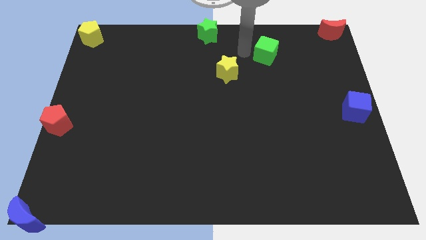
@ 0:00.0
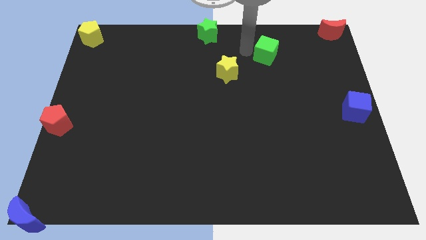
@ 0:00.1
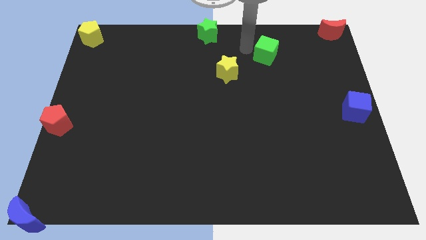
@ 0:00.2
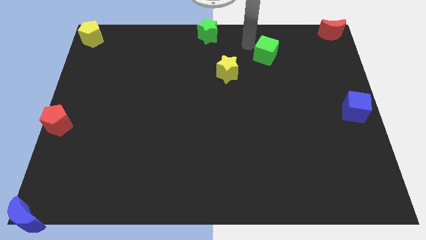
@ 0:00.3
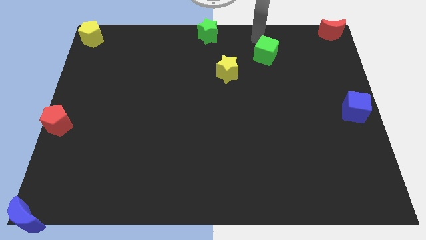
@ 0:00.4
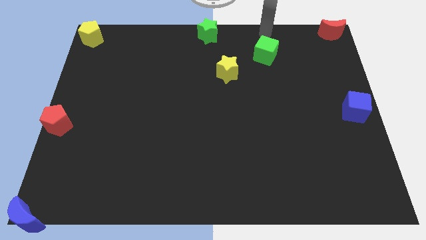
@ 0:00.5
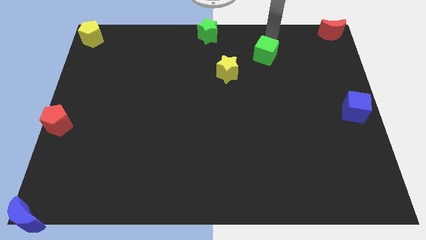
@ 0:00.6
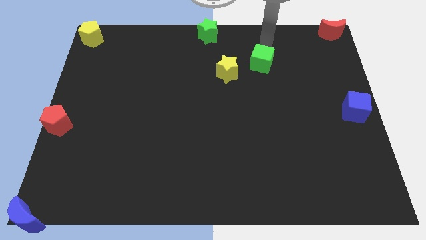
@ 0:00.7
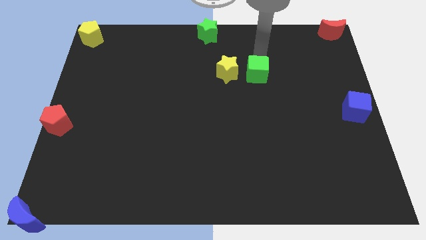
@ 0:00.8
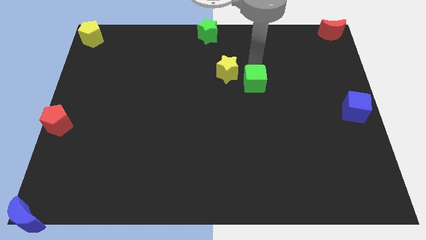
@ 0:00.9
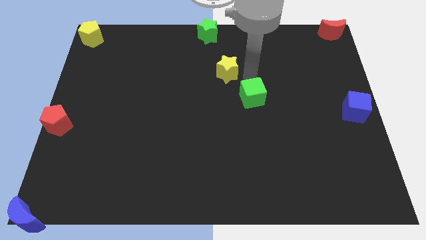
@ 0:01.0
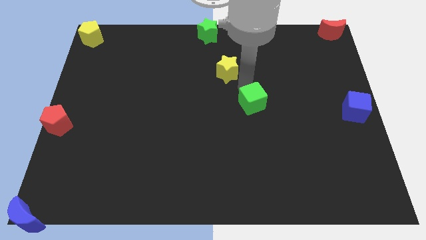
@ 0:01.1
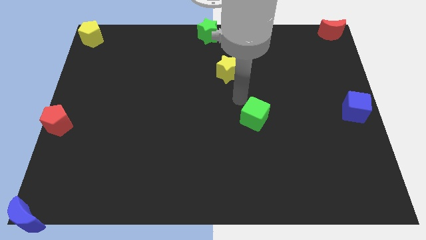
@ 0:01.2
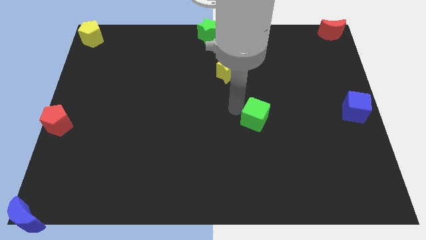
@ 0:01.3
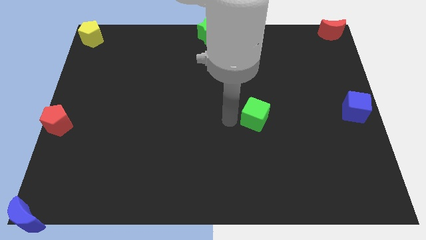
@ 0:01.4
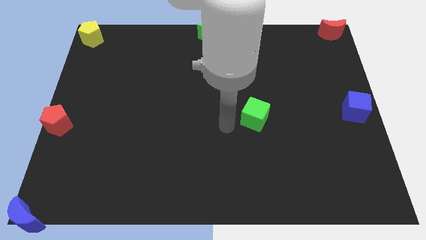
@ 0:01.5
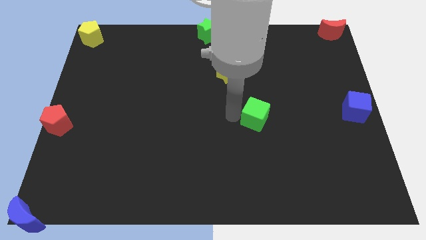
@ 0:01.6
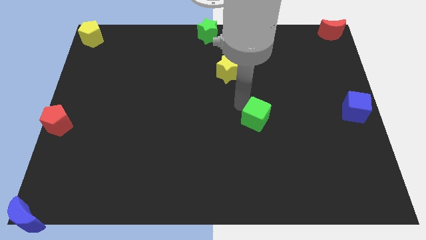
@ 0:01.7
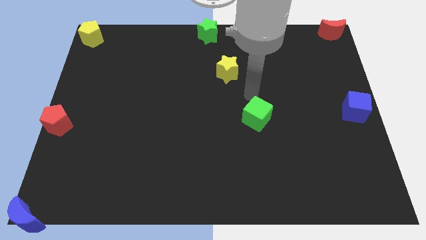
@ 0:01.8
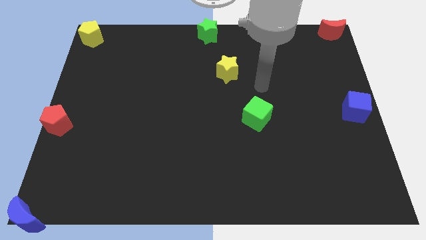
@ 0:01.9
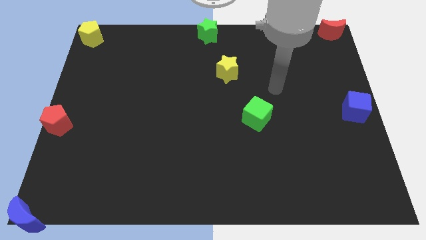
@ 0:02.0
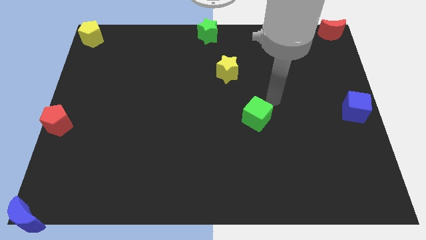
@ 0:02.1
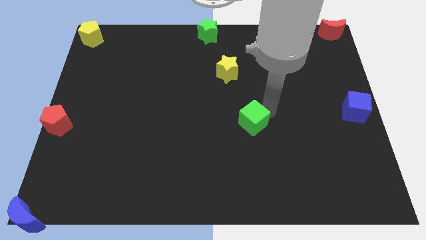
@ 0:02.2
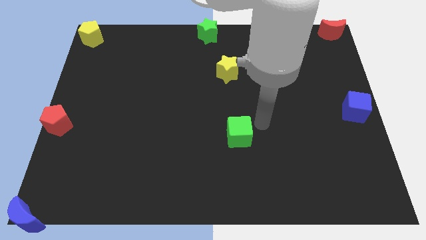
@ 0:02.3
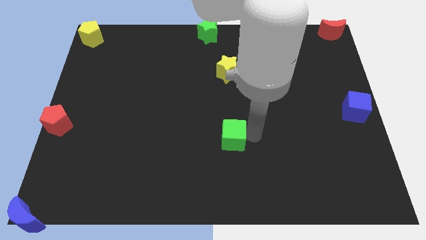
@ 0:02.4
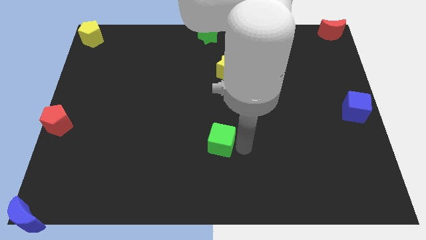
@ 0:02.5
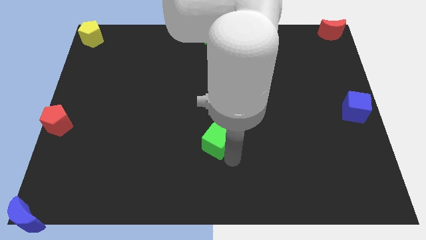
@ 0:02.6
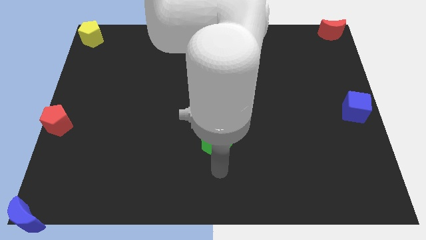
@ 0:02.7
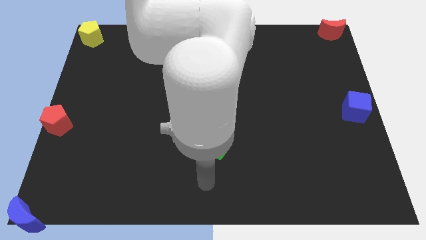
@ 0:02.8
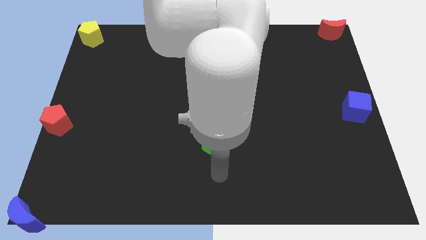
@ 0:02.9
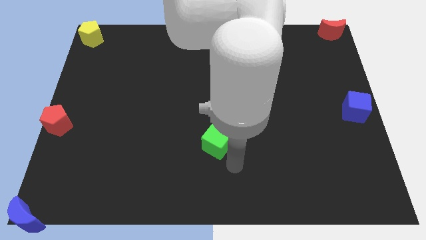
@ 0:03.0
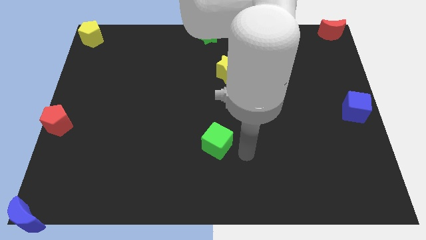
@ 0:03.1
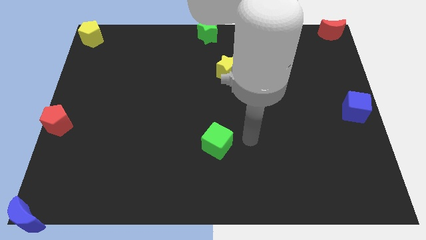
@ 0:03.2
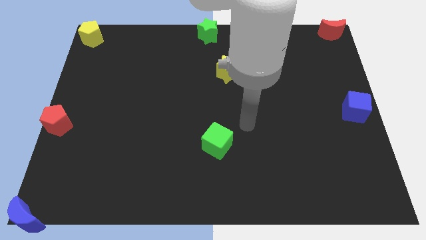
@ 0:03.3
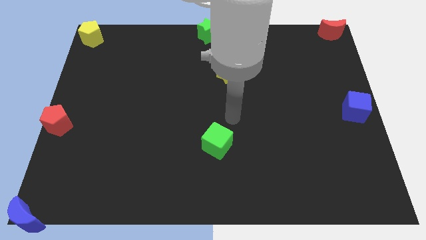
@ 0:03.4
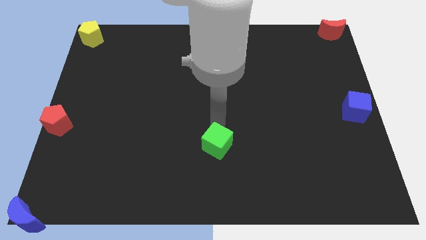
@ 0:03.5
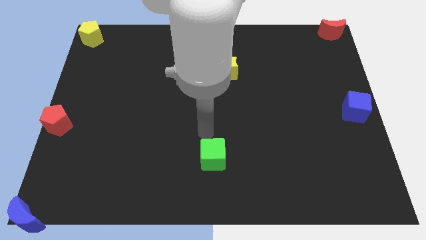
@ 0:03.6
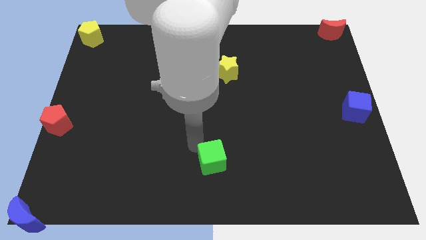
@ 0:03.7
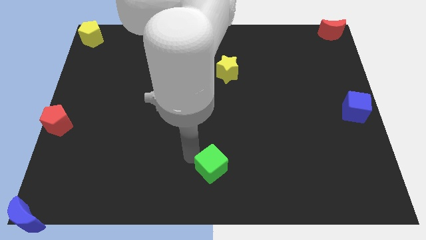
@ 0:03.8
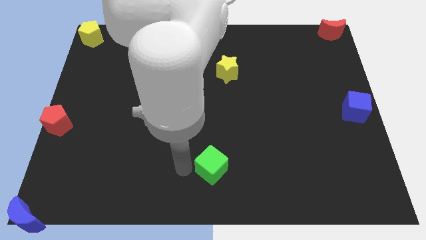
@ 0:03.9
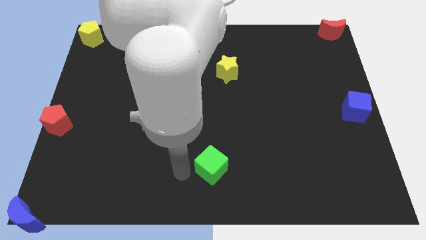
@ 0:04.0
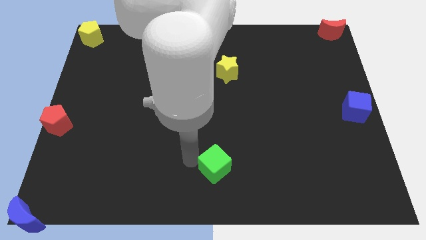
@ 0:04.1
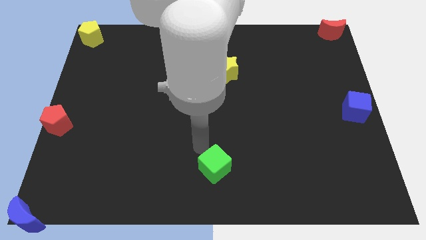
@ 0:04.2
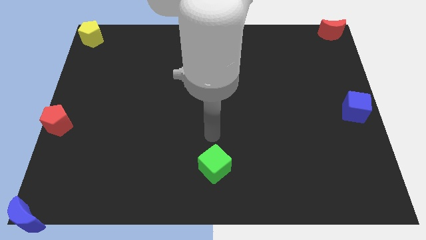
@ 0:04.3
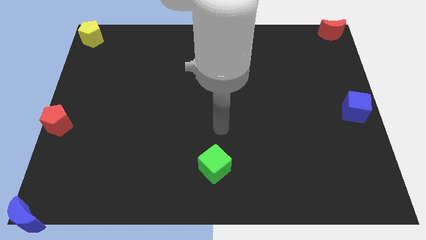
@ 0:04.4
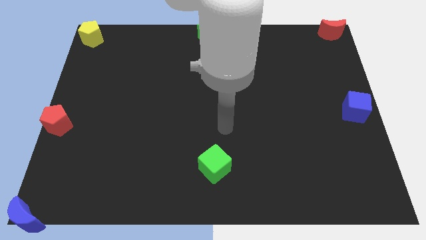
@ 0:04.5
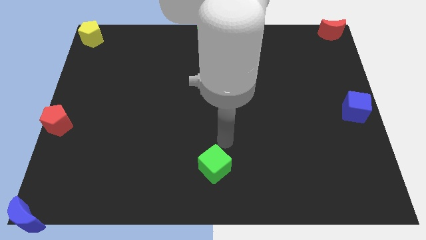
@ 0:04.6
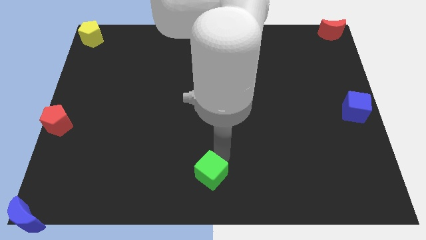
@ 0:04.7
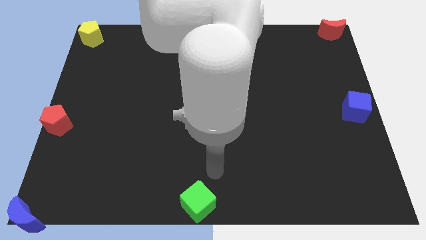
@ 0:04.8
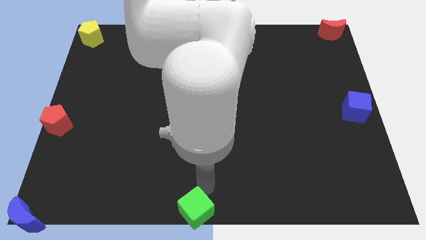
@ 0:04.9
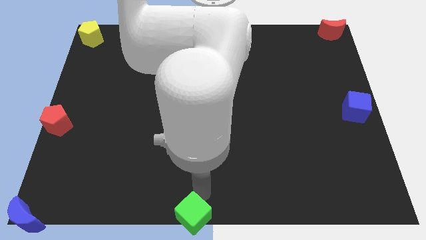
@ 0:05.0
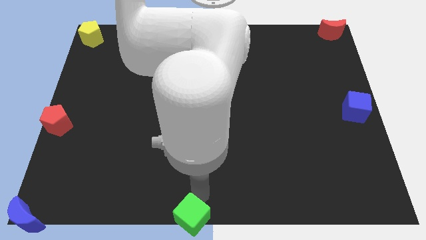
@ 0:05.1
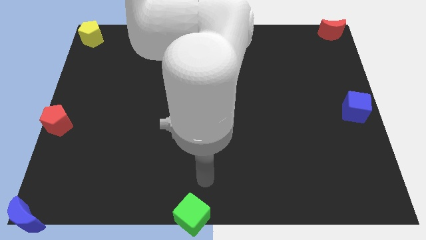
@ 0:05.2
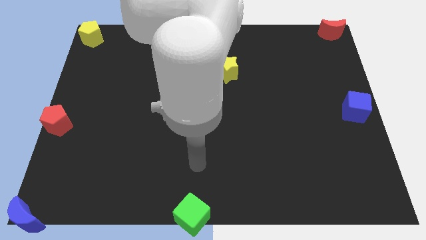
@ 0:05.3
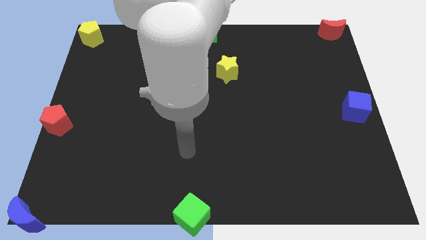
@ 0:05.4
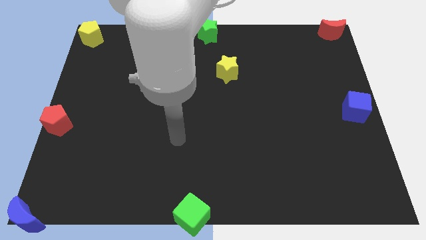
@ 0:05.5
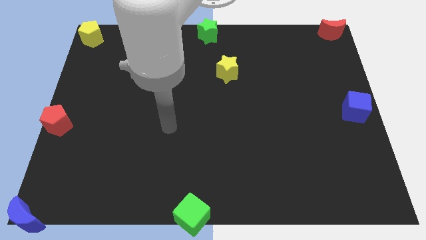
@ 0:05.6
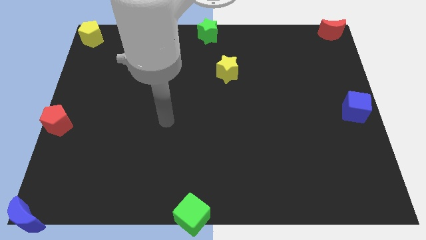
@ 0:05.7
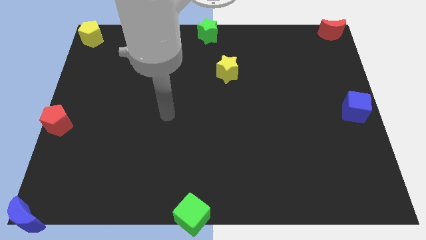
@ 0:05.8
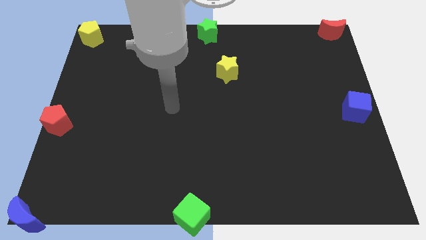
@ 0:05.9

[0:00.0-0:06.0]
push the green cube to the bottom center of the board

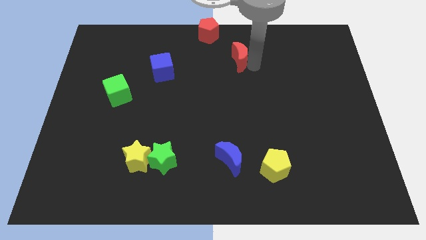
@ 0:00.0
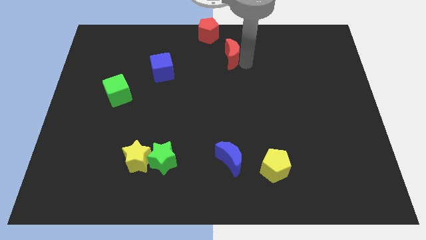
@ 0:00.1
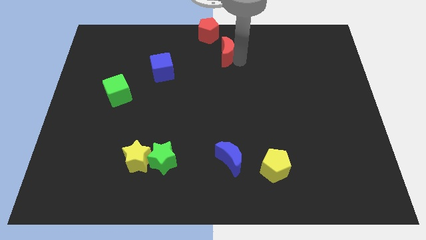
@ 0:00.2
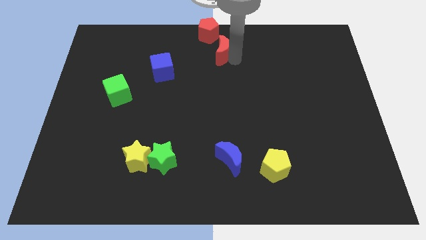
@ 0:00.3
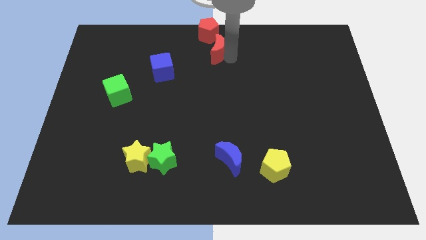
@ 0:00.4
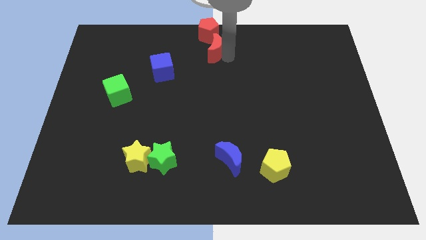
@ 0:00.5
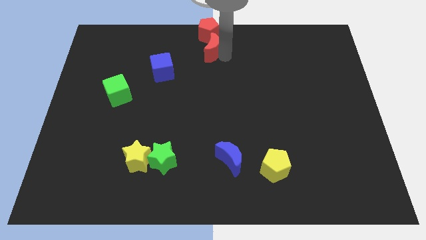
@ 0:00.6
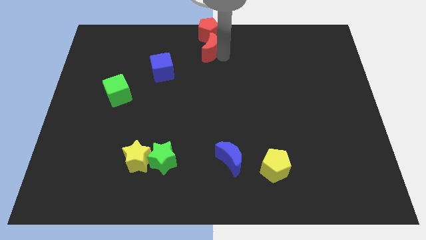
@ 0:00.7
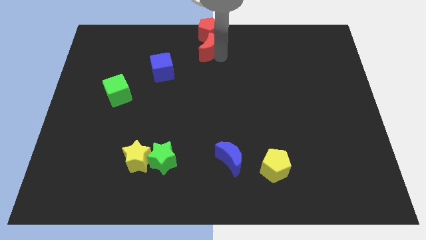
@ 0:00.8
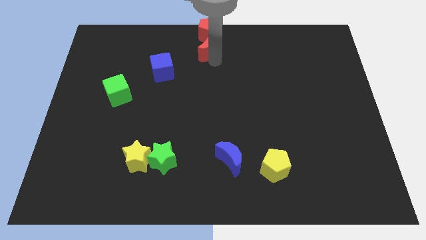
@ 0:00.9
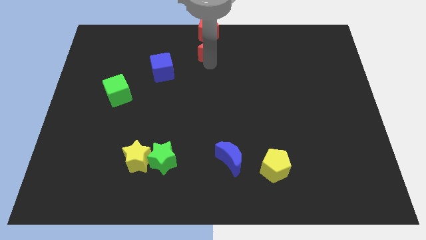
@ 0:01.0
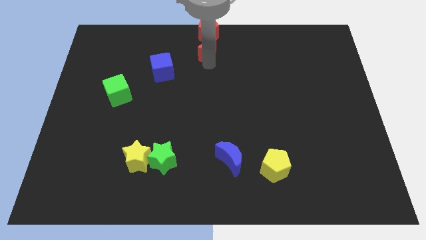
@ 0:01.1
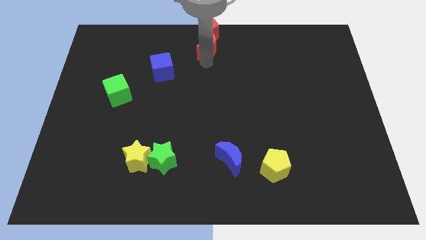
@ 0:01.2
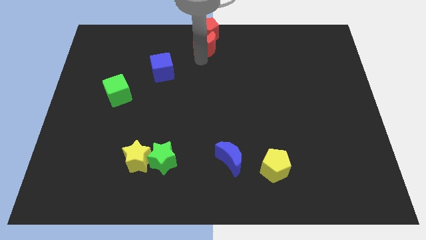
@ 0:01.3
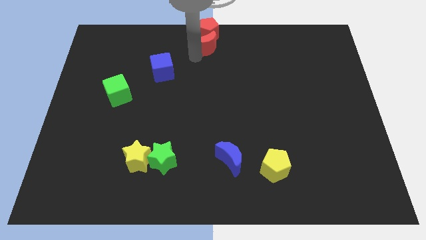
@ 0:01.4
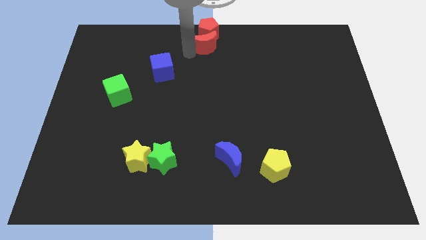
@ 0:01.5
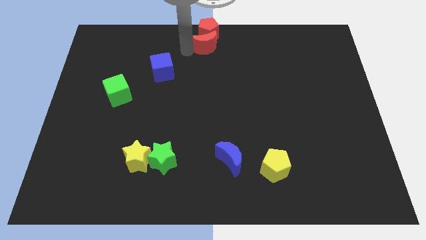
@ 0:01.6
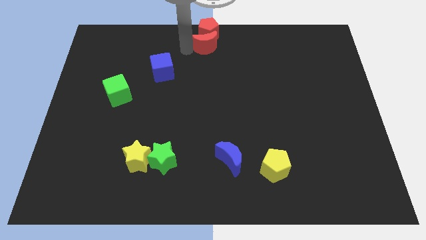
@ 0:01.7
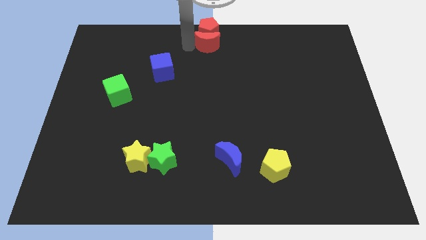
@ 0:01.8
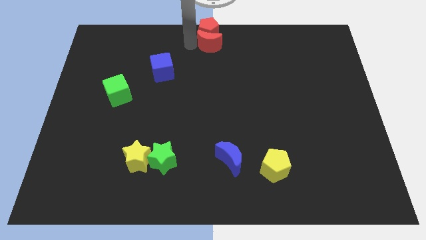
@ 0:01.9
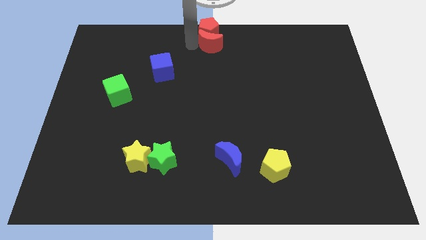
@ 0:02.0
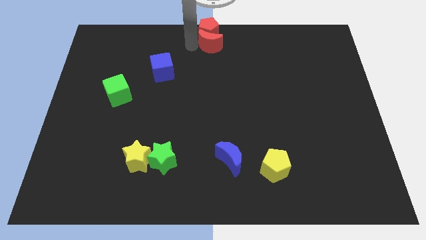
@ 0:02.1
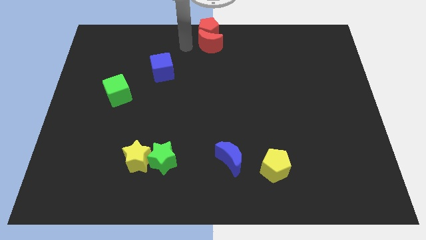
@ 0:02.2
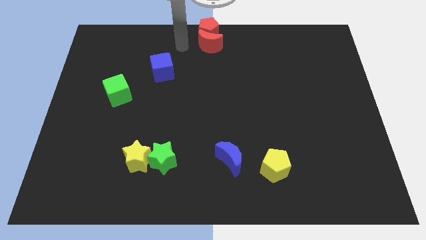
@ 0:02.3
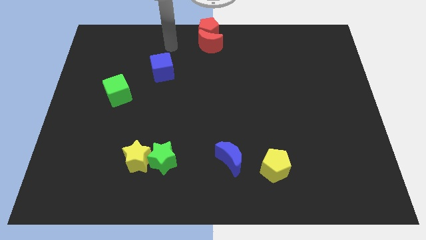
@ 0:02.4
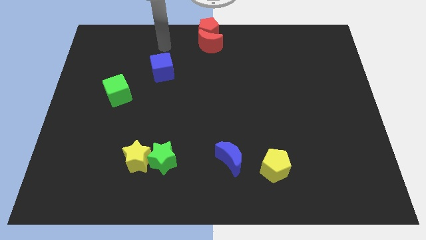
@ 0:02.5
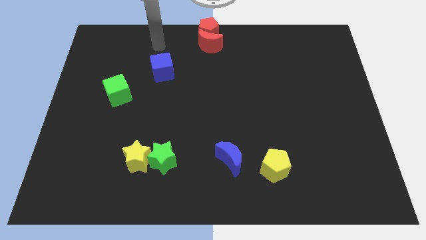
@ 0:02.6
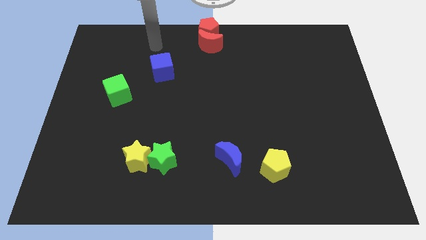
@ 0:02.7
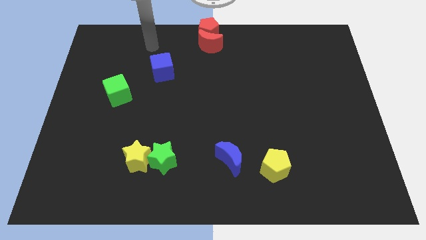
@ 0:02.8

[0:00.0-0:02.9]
push red moon into the red pentagon

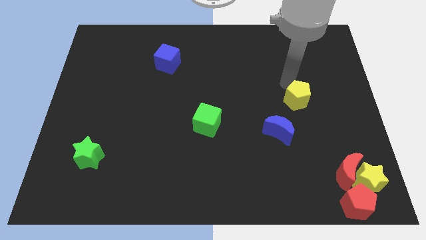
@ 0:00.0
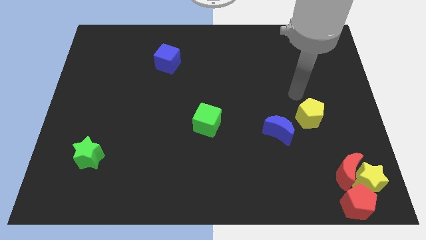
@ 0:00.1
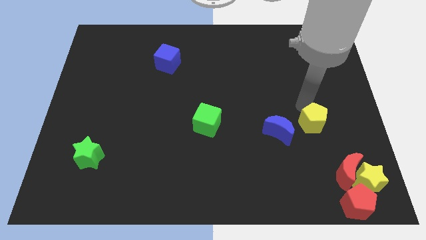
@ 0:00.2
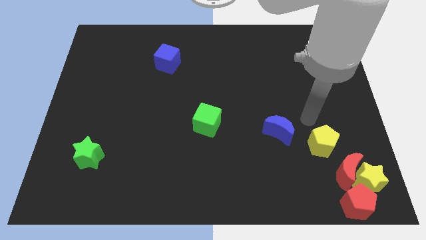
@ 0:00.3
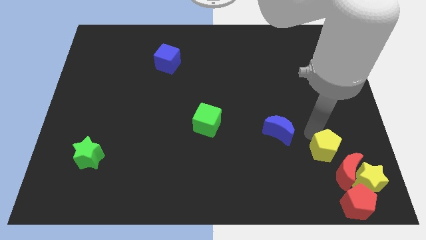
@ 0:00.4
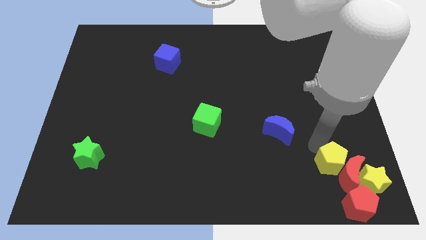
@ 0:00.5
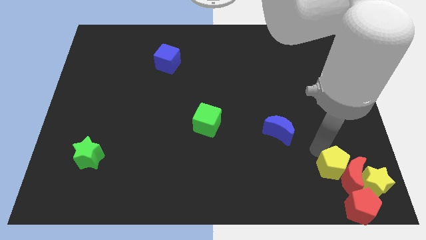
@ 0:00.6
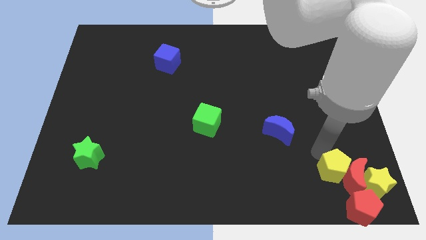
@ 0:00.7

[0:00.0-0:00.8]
move the yellow pentagon to the left of the red crescent
